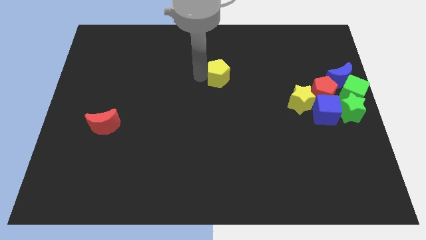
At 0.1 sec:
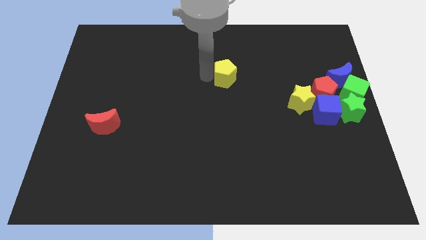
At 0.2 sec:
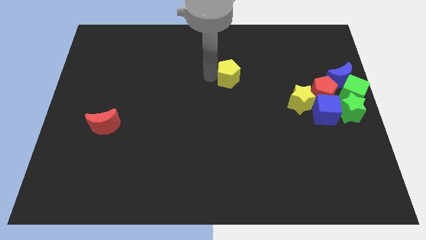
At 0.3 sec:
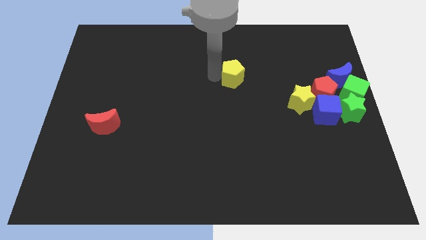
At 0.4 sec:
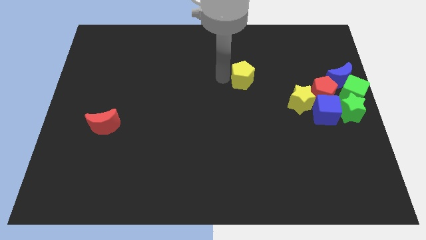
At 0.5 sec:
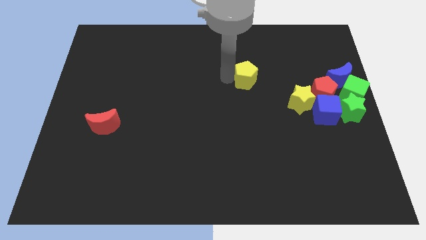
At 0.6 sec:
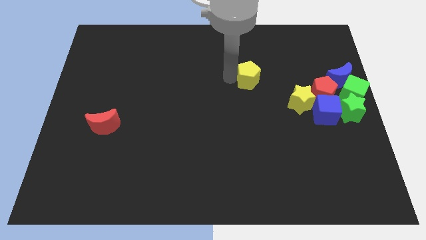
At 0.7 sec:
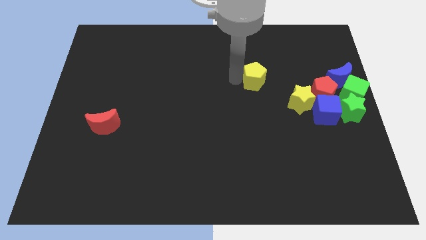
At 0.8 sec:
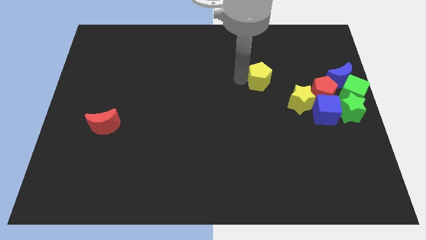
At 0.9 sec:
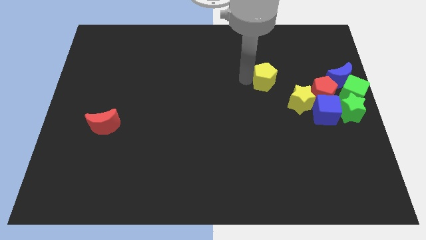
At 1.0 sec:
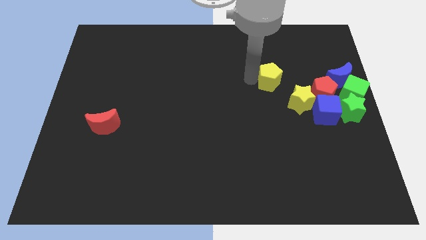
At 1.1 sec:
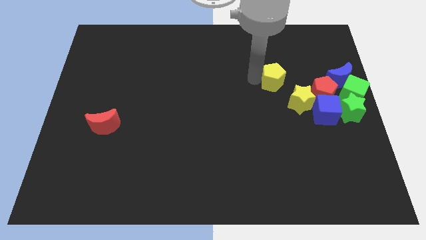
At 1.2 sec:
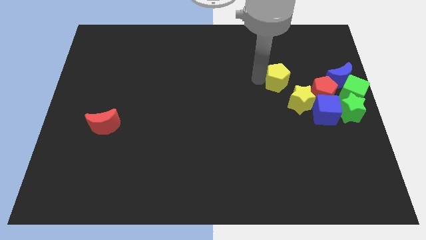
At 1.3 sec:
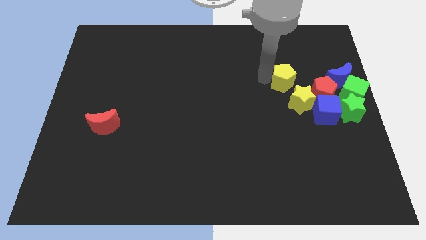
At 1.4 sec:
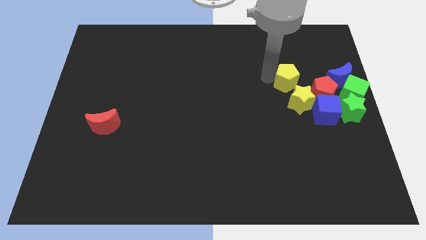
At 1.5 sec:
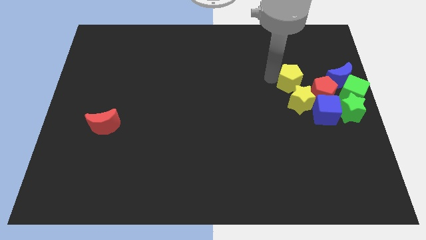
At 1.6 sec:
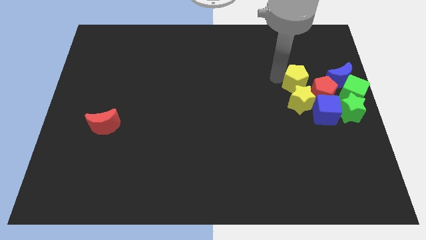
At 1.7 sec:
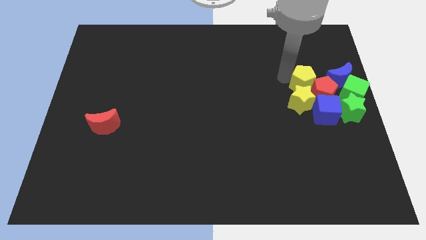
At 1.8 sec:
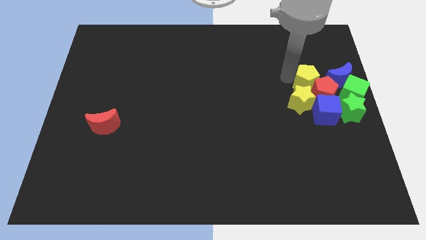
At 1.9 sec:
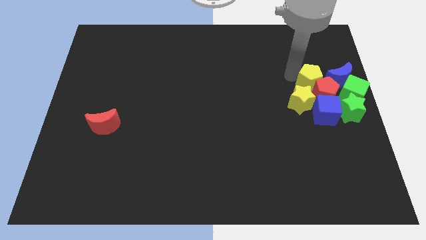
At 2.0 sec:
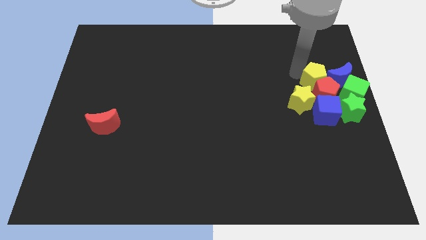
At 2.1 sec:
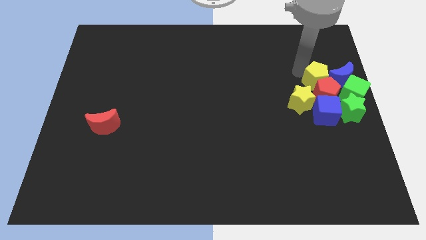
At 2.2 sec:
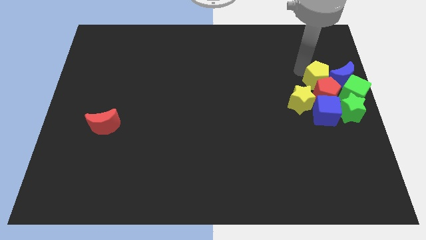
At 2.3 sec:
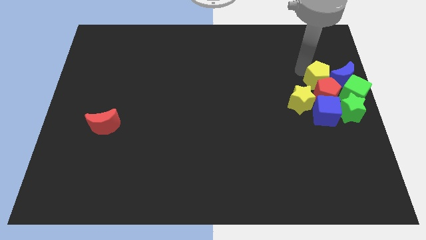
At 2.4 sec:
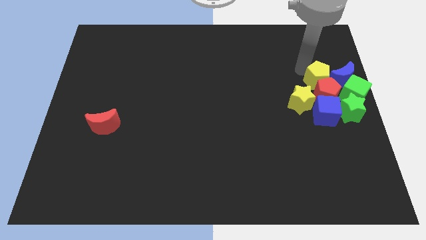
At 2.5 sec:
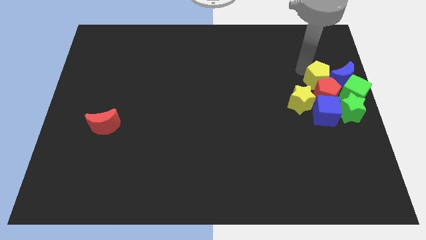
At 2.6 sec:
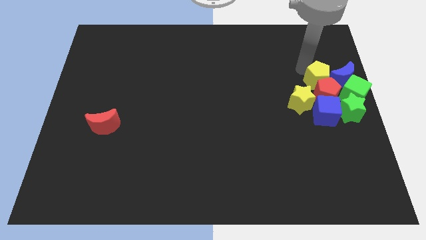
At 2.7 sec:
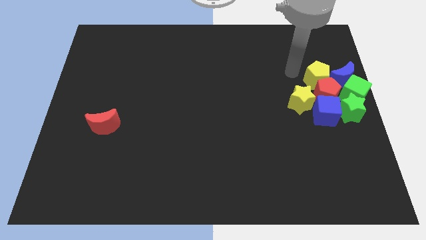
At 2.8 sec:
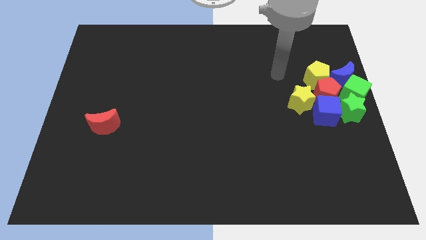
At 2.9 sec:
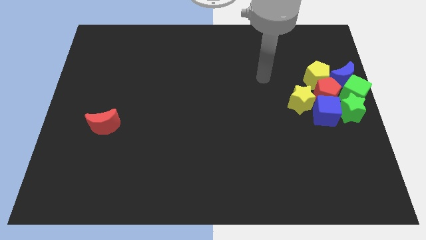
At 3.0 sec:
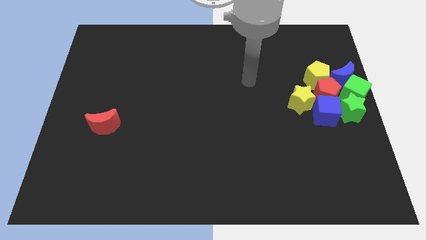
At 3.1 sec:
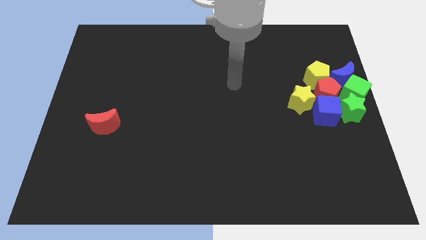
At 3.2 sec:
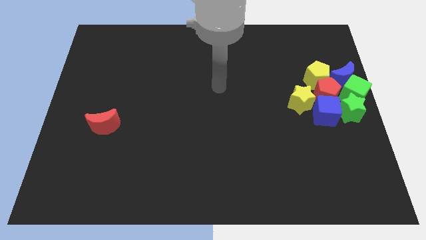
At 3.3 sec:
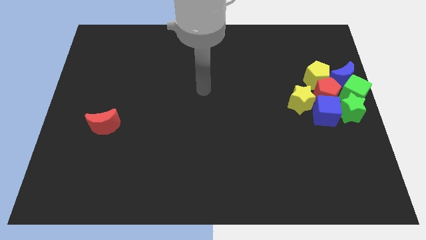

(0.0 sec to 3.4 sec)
push the yellow pentagon into the red pentagon

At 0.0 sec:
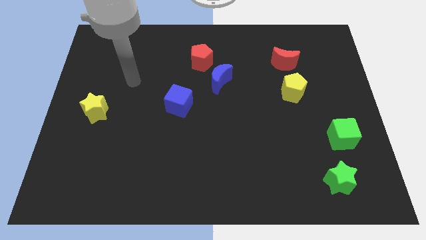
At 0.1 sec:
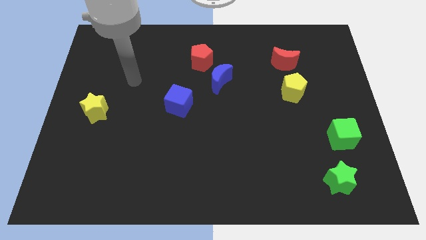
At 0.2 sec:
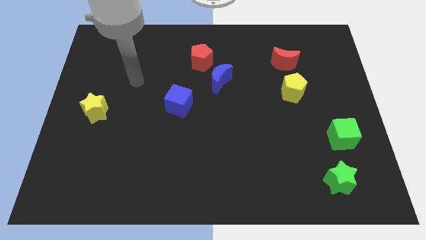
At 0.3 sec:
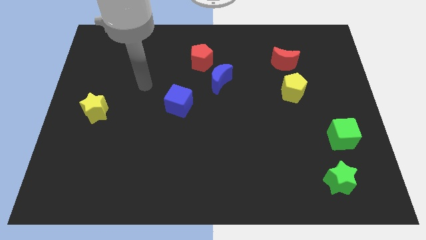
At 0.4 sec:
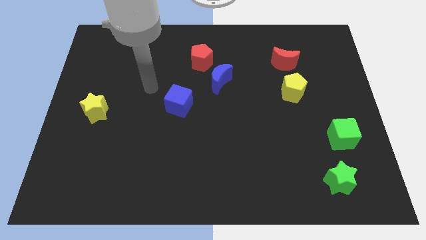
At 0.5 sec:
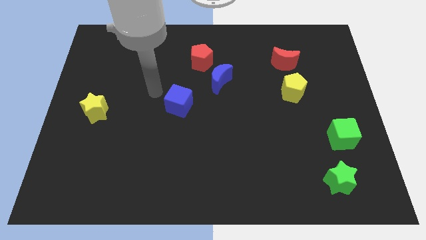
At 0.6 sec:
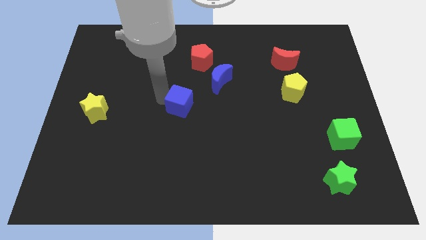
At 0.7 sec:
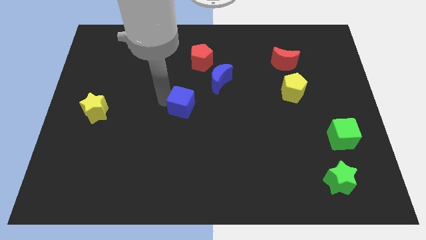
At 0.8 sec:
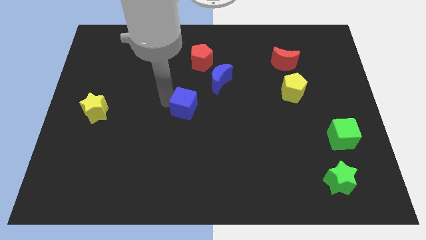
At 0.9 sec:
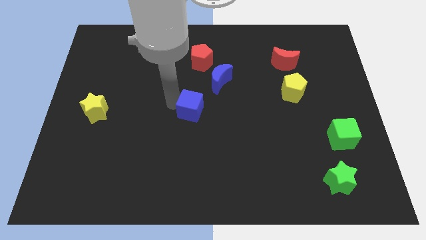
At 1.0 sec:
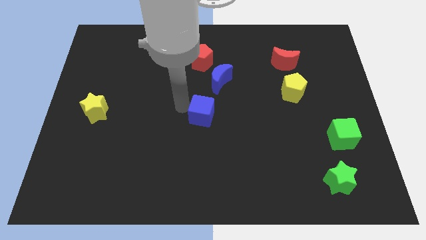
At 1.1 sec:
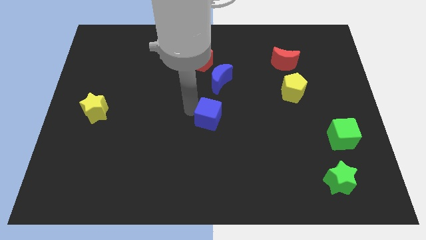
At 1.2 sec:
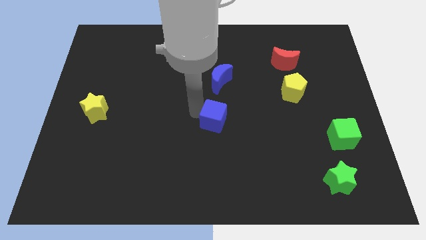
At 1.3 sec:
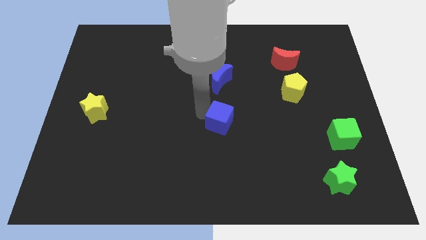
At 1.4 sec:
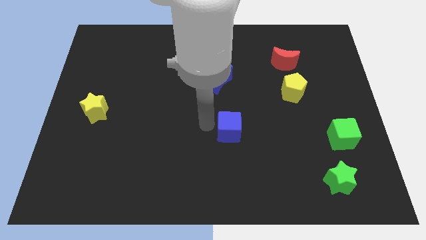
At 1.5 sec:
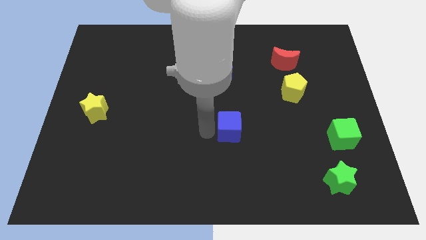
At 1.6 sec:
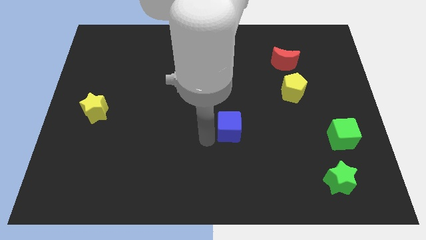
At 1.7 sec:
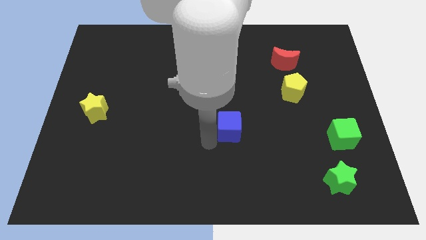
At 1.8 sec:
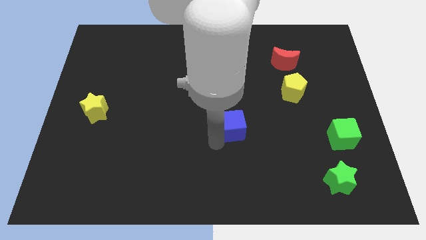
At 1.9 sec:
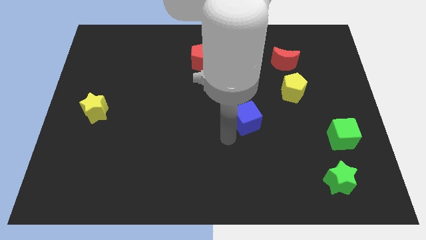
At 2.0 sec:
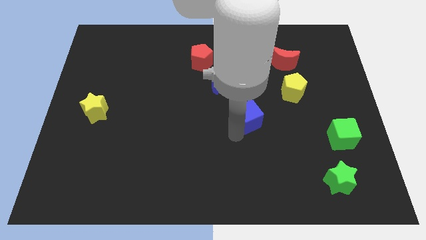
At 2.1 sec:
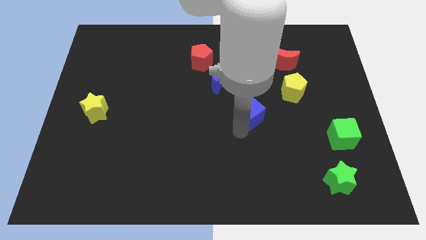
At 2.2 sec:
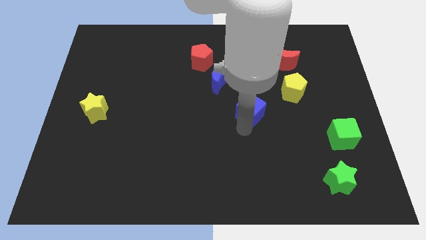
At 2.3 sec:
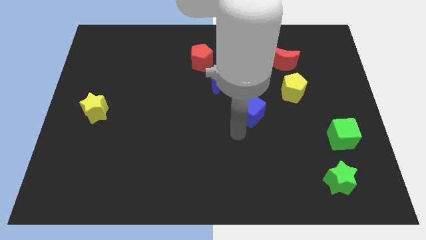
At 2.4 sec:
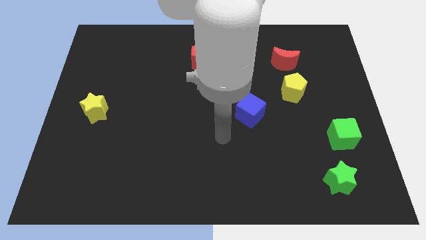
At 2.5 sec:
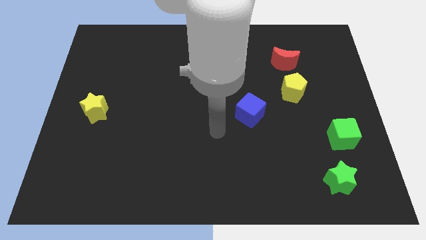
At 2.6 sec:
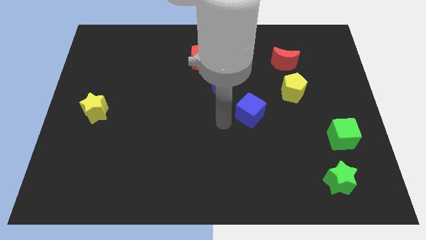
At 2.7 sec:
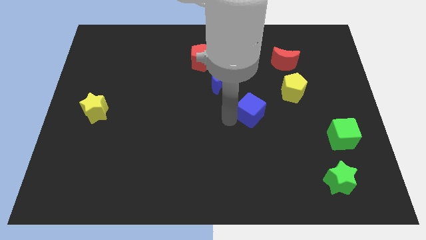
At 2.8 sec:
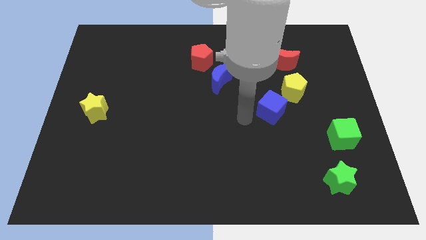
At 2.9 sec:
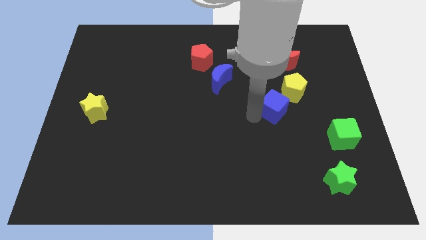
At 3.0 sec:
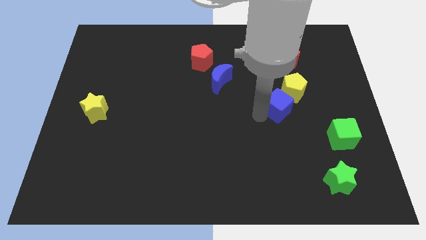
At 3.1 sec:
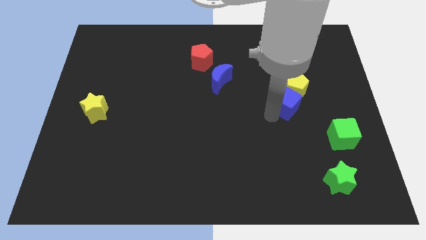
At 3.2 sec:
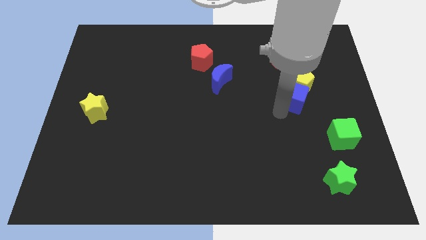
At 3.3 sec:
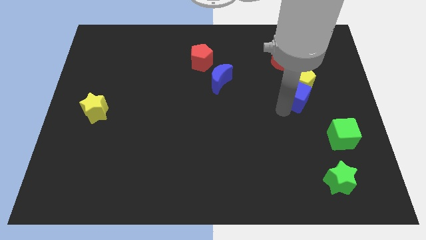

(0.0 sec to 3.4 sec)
push the blue cube to the bottom of the yellow pentagon

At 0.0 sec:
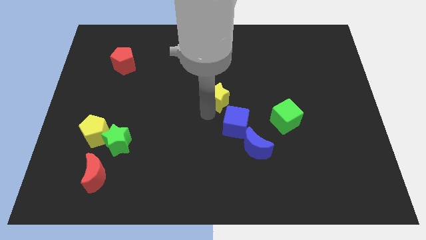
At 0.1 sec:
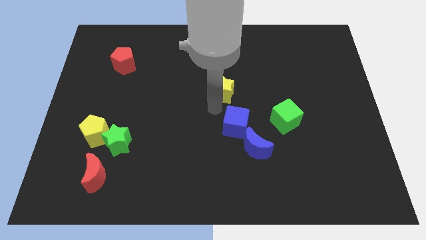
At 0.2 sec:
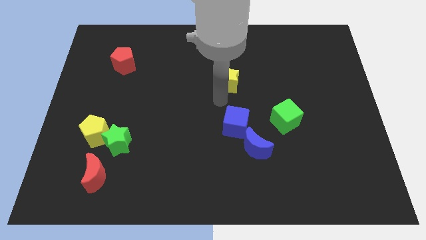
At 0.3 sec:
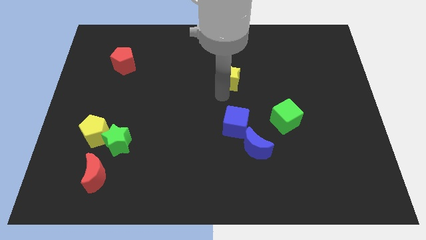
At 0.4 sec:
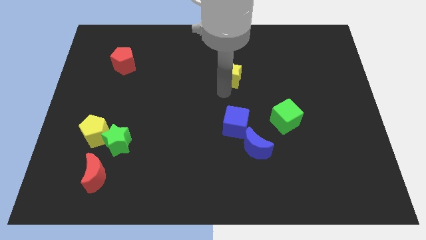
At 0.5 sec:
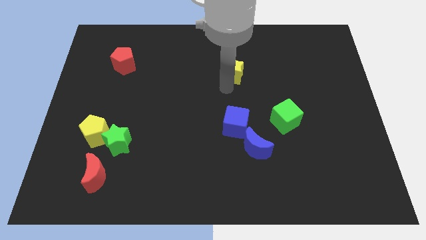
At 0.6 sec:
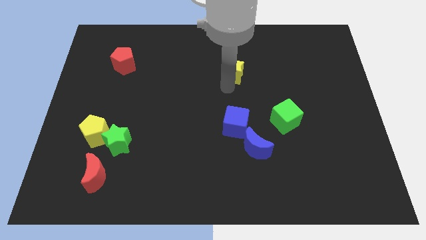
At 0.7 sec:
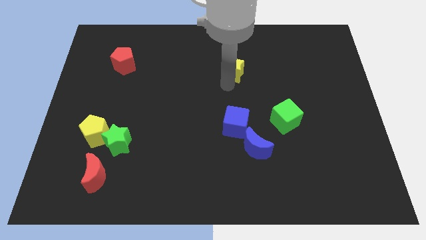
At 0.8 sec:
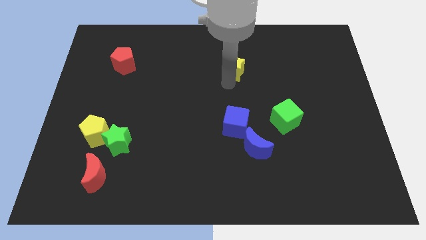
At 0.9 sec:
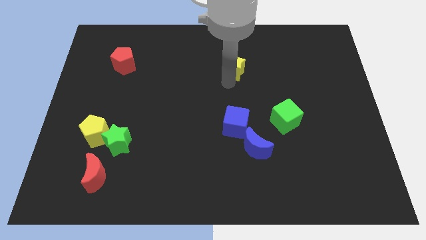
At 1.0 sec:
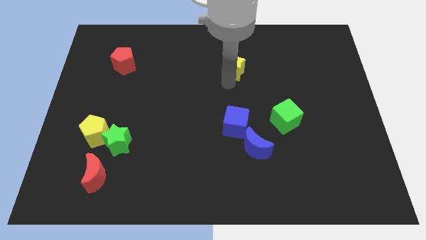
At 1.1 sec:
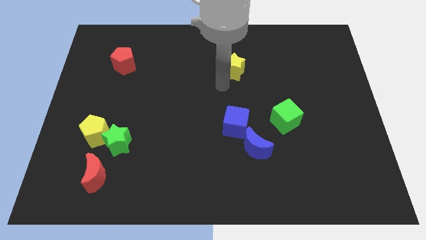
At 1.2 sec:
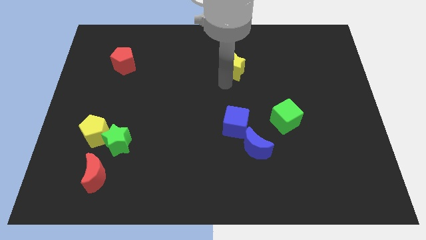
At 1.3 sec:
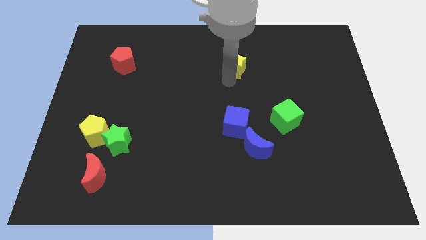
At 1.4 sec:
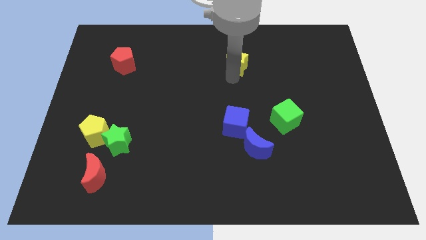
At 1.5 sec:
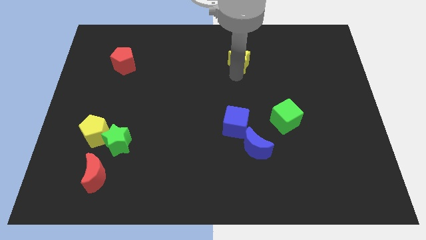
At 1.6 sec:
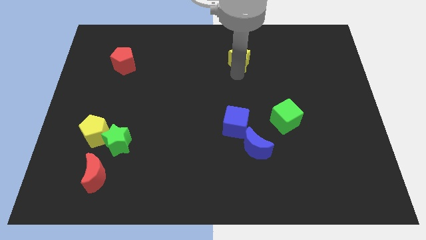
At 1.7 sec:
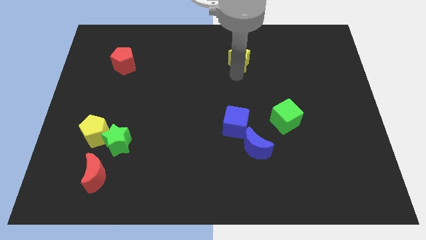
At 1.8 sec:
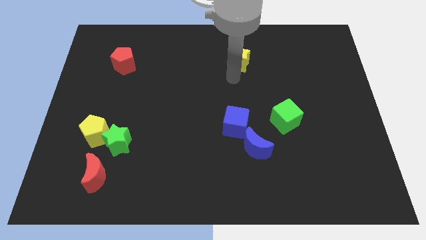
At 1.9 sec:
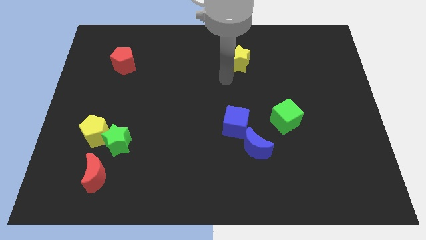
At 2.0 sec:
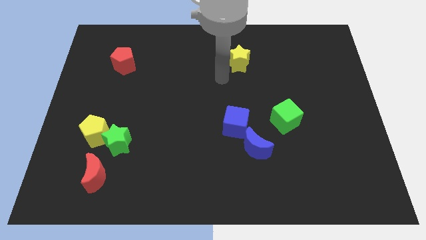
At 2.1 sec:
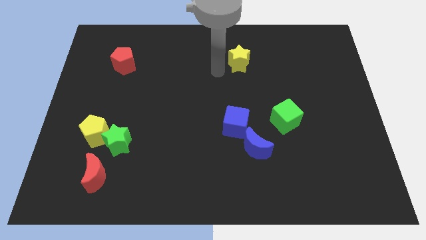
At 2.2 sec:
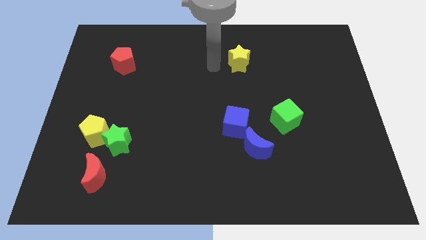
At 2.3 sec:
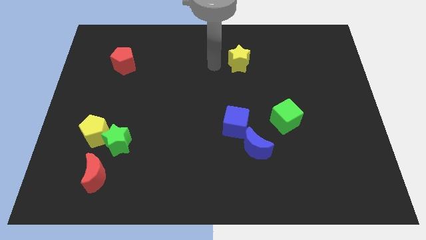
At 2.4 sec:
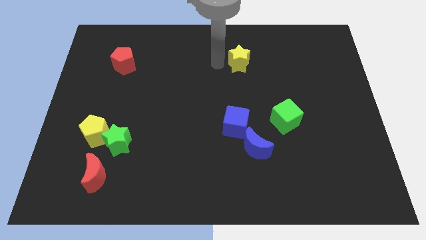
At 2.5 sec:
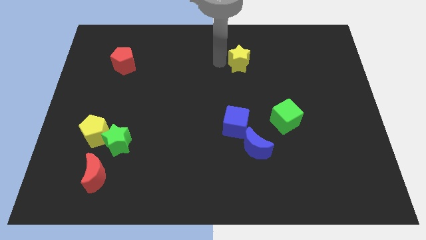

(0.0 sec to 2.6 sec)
place the yellow star vertically above the blue cube
